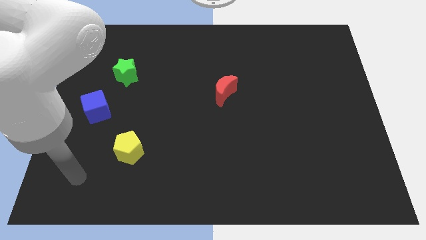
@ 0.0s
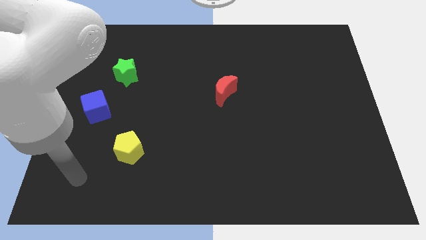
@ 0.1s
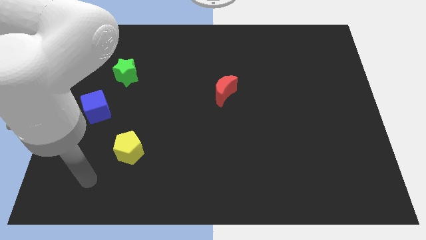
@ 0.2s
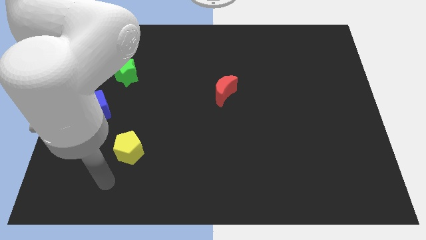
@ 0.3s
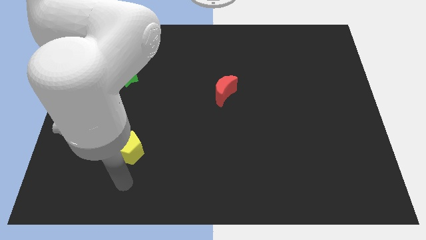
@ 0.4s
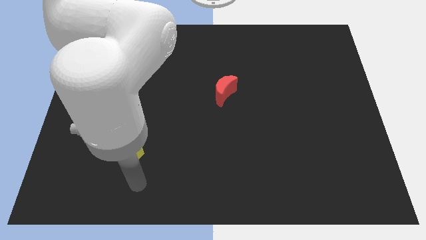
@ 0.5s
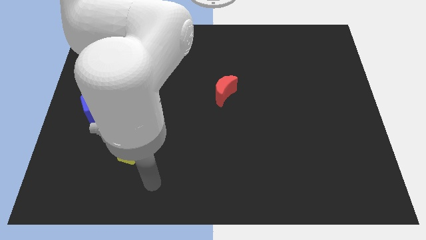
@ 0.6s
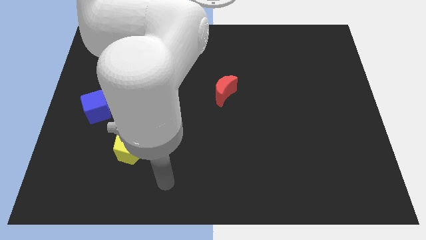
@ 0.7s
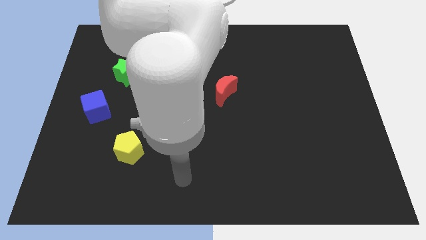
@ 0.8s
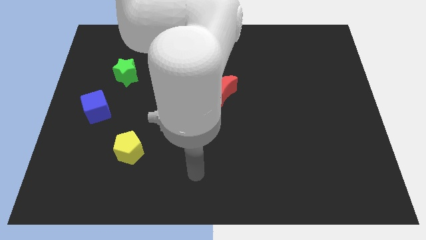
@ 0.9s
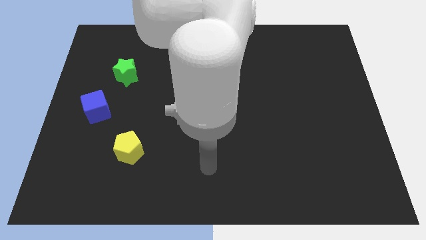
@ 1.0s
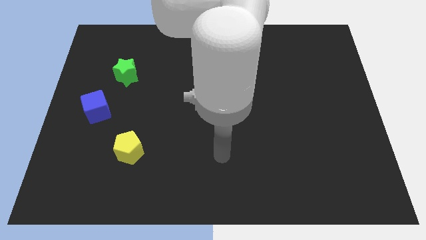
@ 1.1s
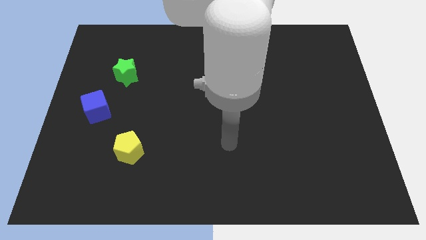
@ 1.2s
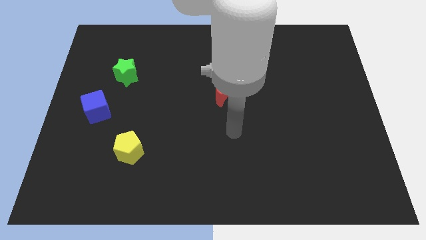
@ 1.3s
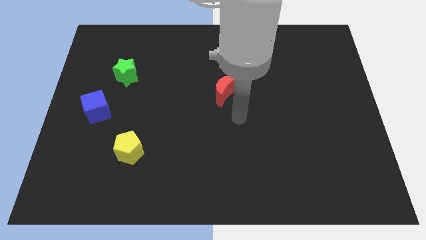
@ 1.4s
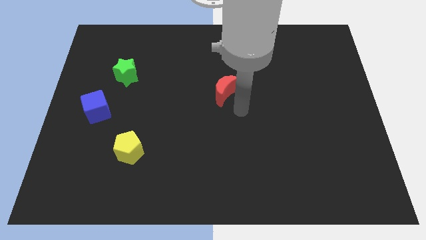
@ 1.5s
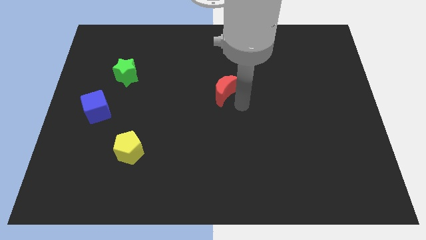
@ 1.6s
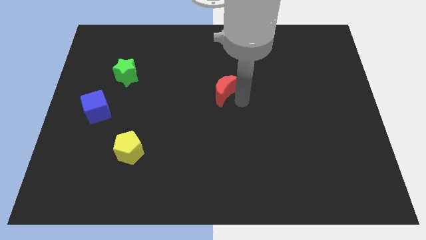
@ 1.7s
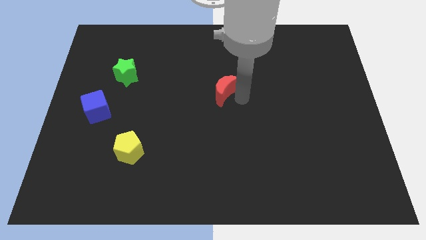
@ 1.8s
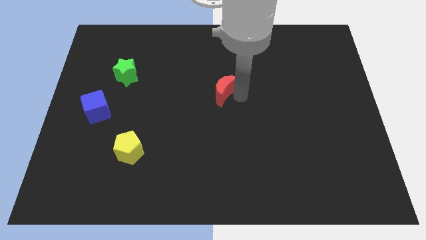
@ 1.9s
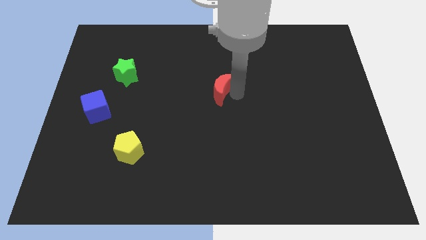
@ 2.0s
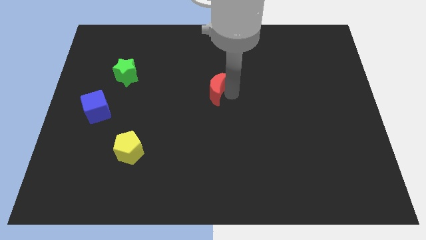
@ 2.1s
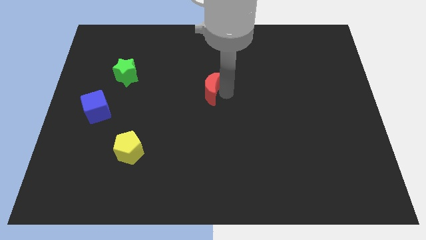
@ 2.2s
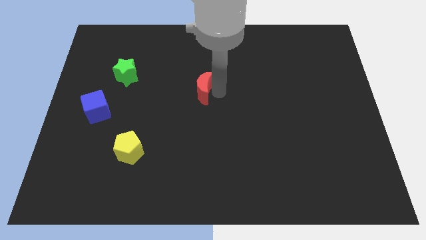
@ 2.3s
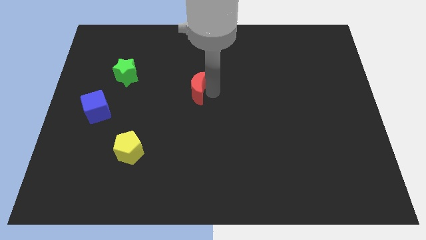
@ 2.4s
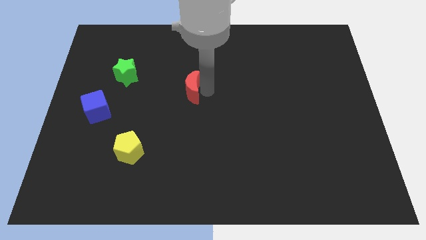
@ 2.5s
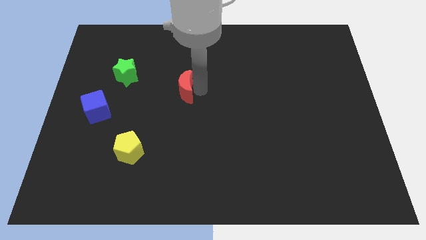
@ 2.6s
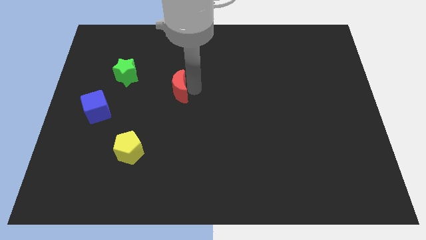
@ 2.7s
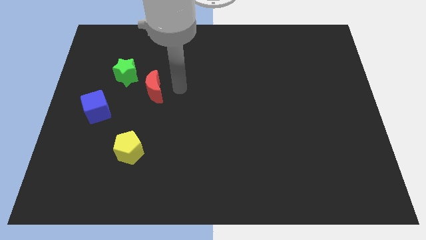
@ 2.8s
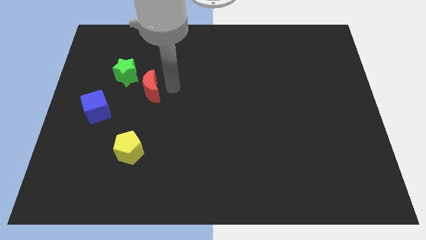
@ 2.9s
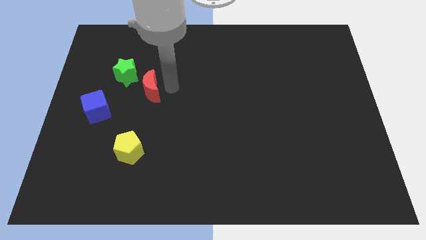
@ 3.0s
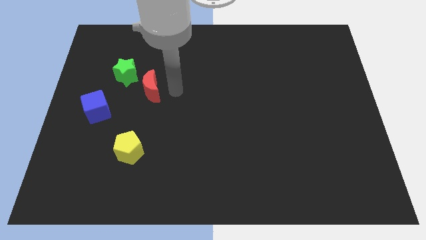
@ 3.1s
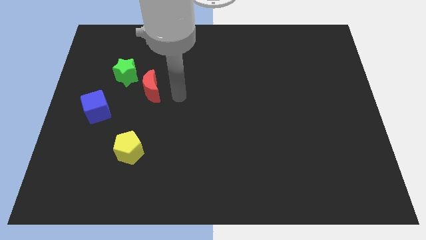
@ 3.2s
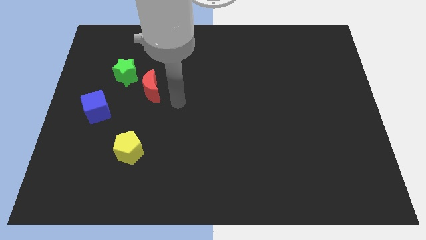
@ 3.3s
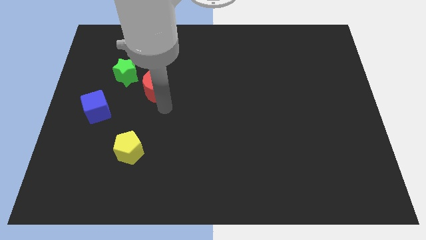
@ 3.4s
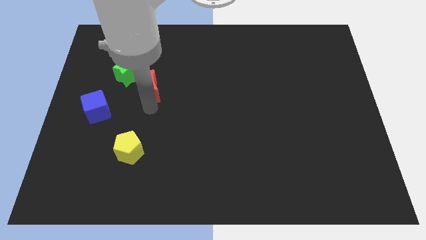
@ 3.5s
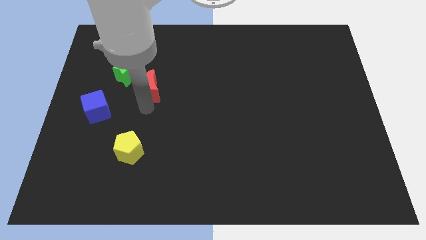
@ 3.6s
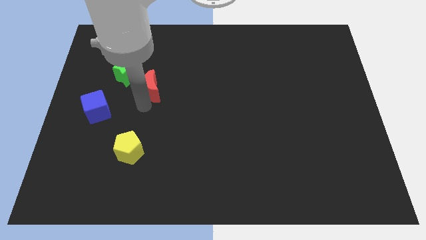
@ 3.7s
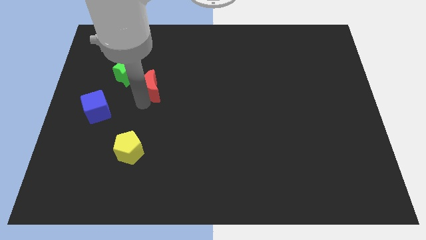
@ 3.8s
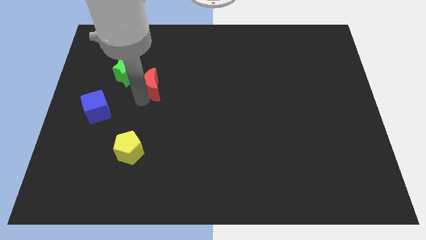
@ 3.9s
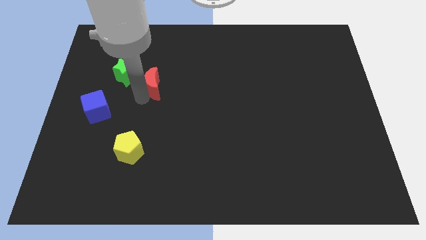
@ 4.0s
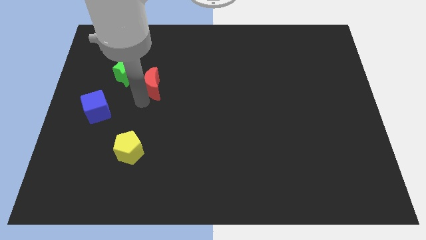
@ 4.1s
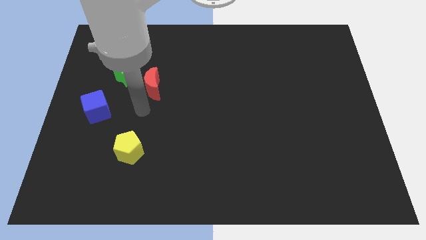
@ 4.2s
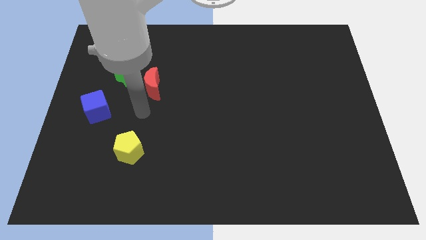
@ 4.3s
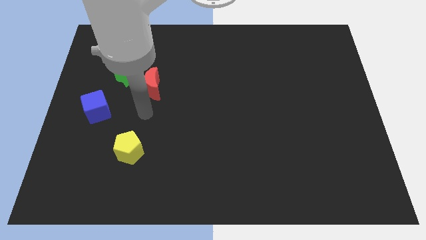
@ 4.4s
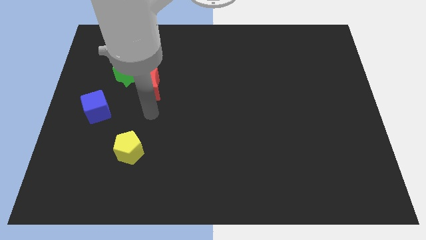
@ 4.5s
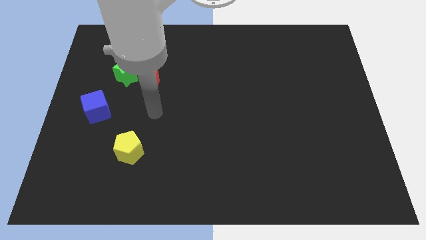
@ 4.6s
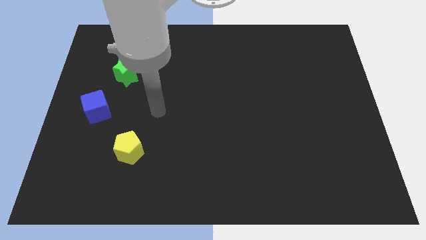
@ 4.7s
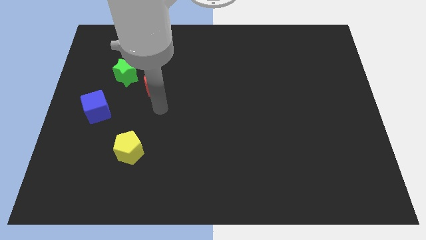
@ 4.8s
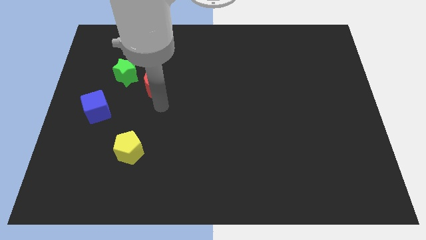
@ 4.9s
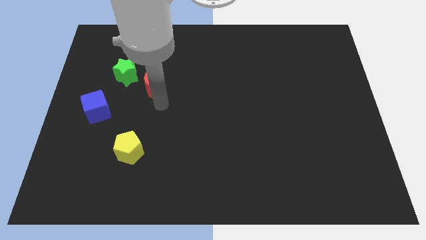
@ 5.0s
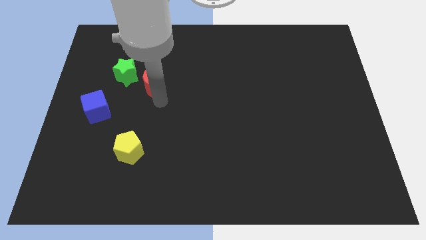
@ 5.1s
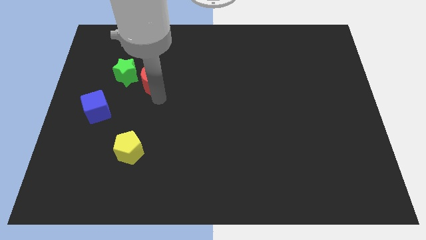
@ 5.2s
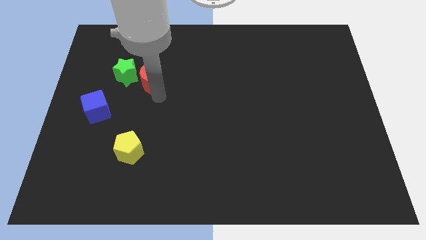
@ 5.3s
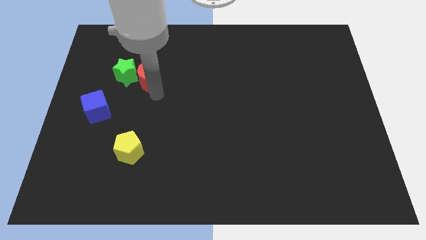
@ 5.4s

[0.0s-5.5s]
move the moon next to the star

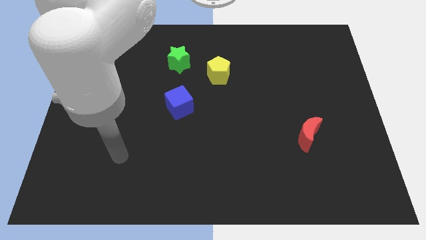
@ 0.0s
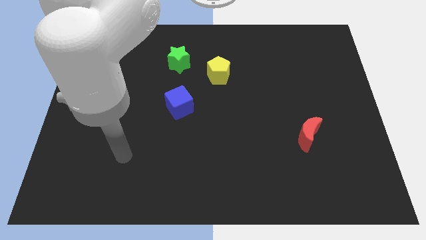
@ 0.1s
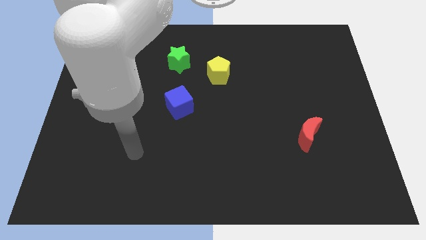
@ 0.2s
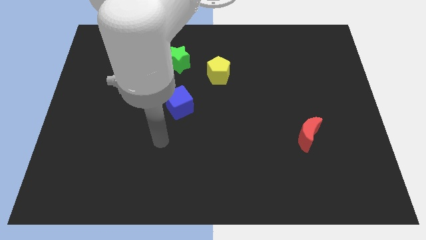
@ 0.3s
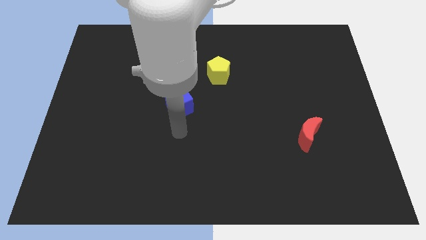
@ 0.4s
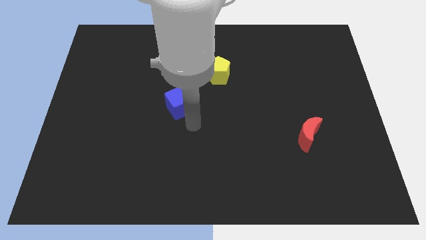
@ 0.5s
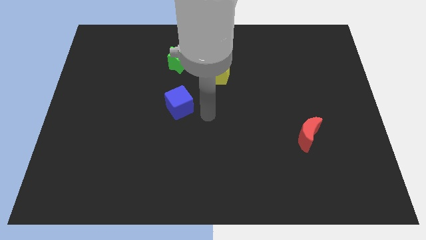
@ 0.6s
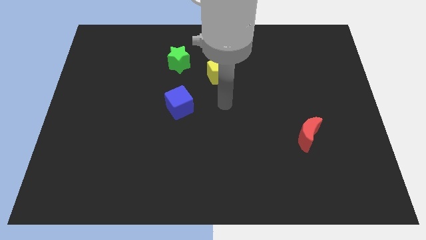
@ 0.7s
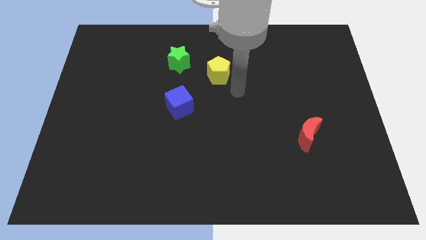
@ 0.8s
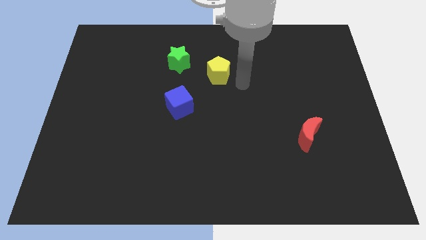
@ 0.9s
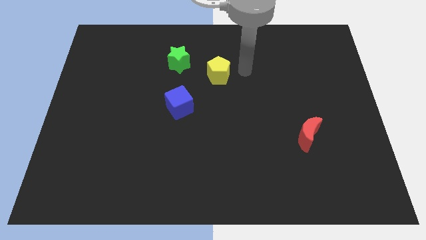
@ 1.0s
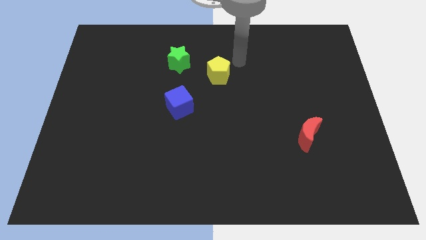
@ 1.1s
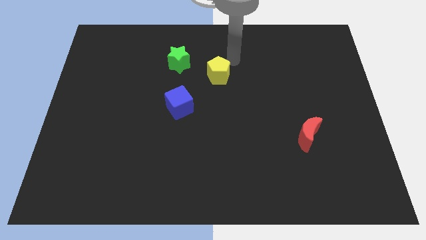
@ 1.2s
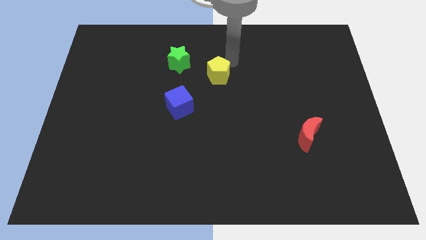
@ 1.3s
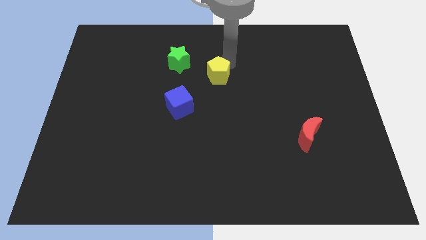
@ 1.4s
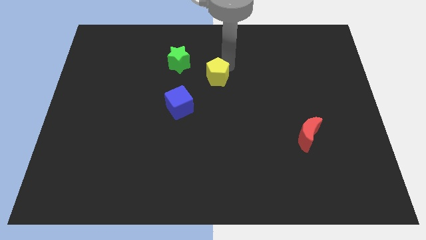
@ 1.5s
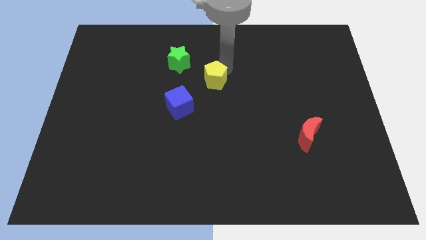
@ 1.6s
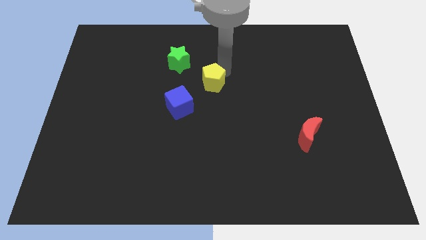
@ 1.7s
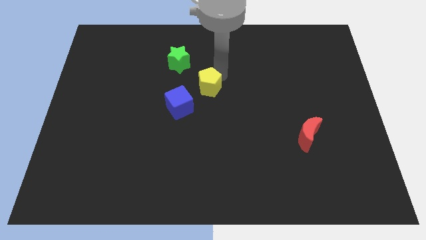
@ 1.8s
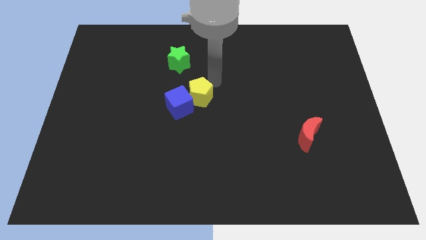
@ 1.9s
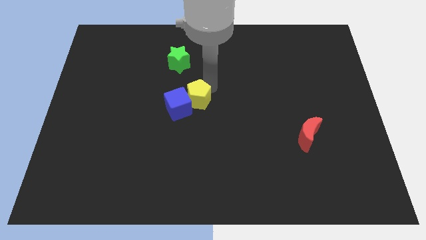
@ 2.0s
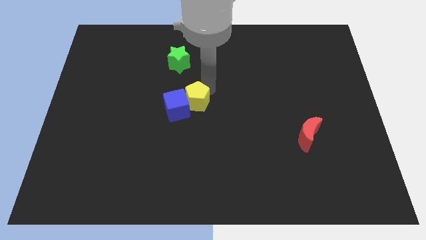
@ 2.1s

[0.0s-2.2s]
move the yellow pentagon towards the blue cube

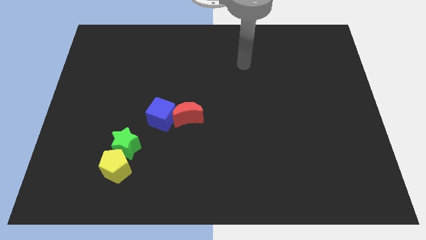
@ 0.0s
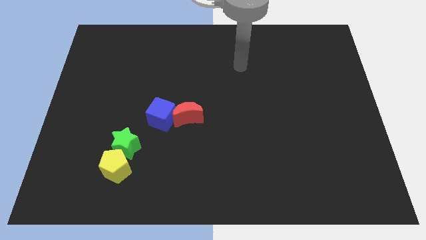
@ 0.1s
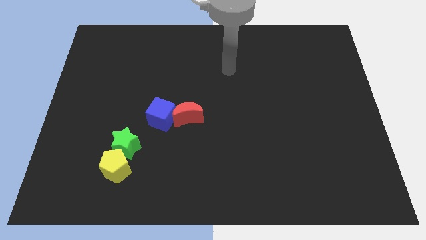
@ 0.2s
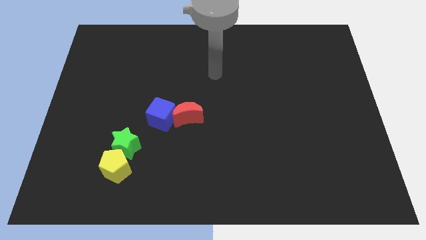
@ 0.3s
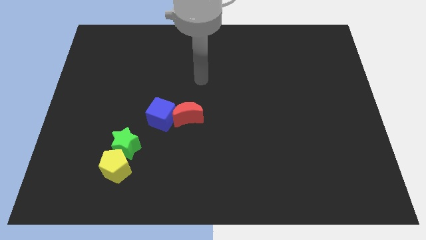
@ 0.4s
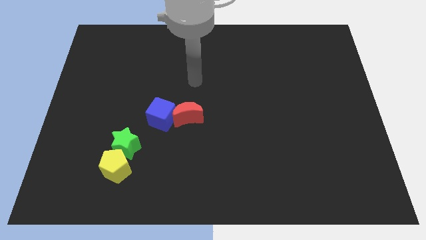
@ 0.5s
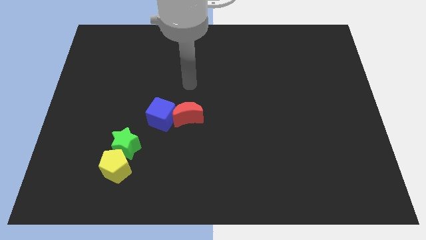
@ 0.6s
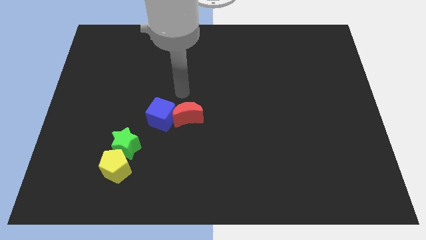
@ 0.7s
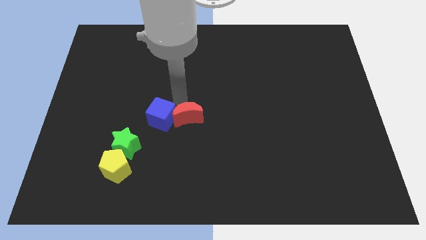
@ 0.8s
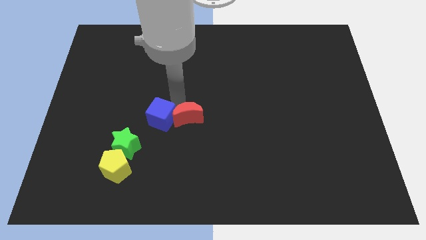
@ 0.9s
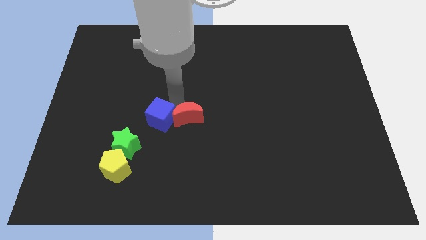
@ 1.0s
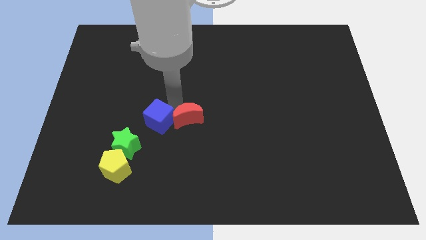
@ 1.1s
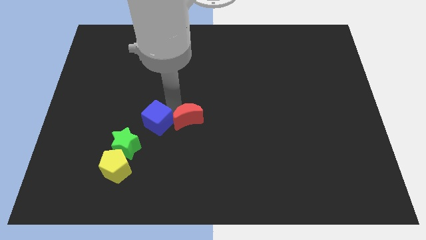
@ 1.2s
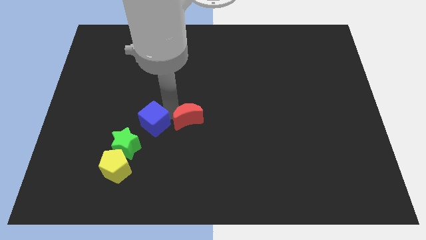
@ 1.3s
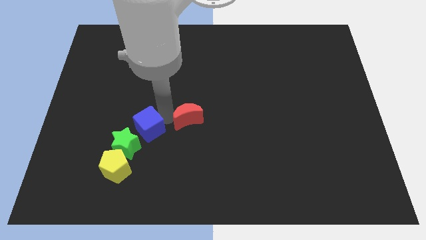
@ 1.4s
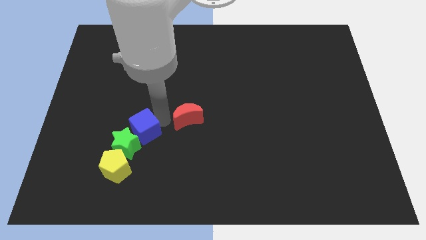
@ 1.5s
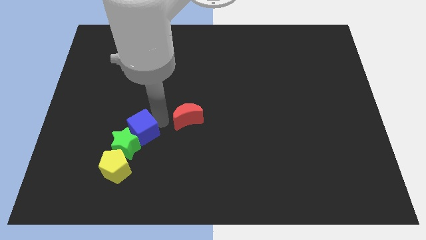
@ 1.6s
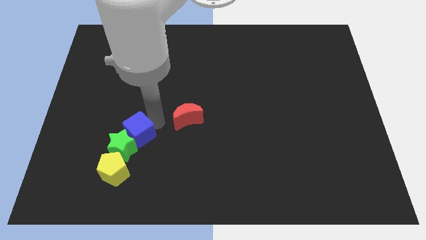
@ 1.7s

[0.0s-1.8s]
push the cube towards the green block
